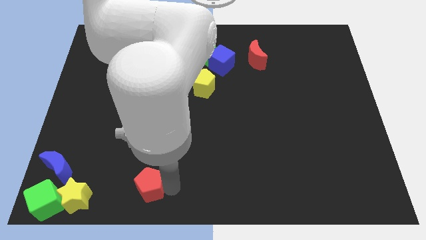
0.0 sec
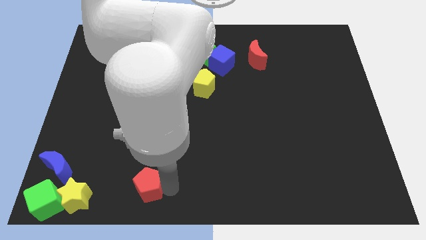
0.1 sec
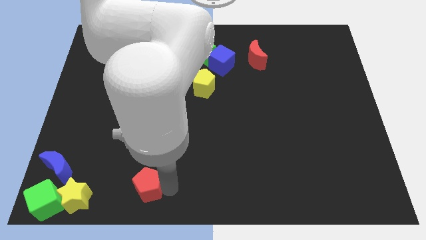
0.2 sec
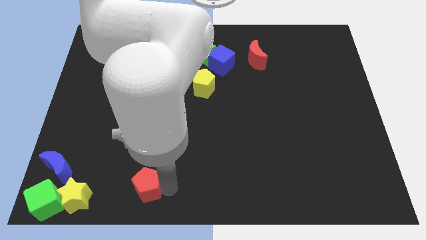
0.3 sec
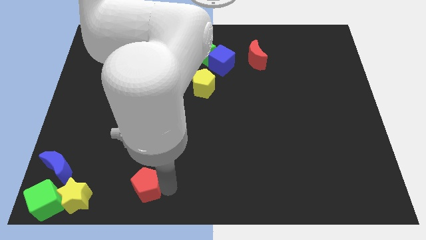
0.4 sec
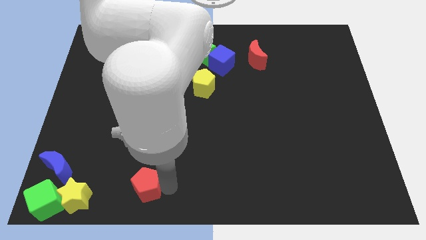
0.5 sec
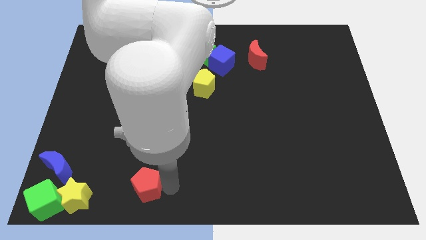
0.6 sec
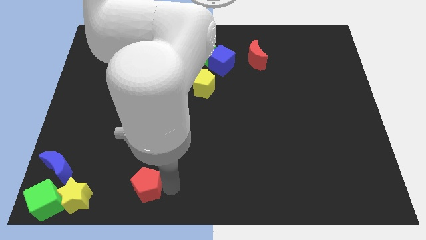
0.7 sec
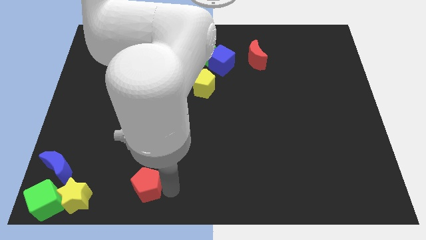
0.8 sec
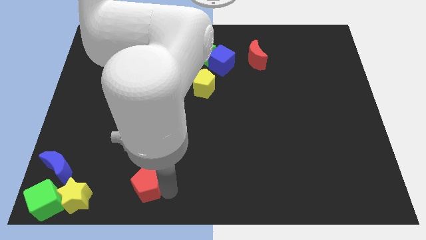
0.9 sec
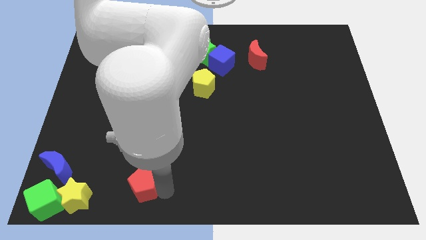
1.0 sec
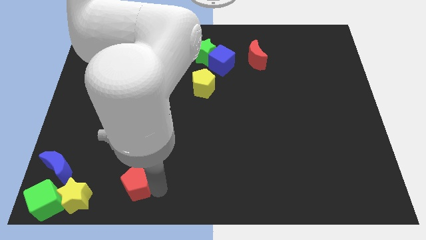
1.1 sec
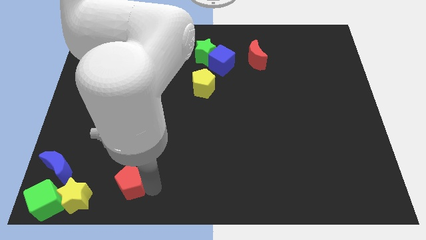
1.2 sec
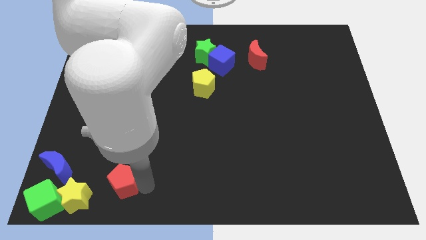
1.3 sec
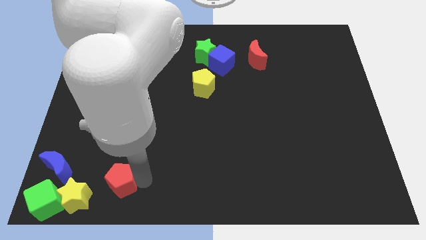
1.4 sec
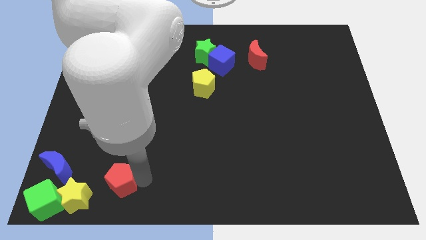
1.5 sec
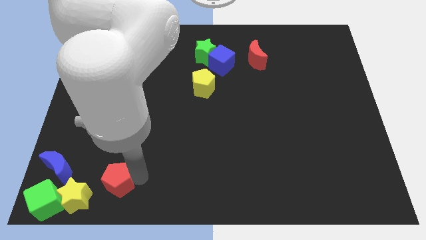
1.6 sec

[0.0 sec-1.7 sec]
move the red pentagon towards the yellow star

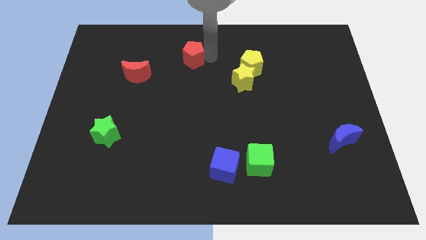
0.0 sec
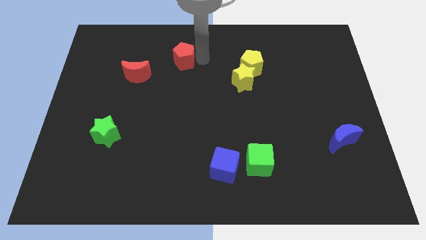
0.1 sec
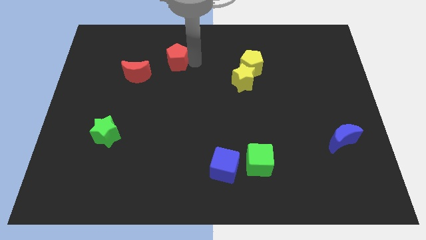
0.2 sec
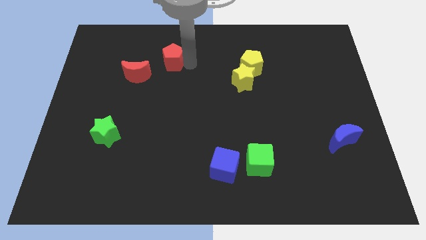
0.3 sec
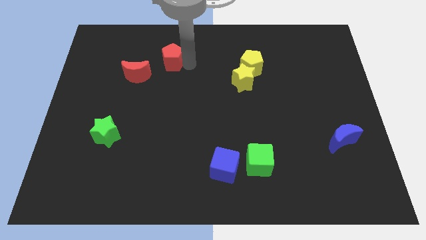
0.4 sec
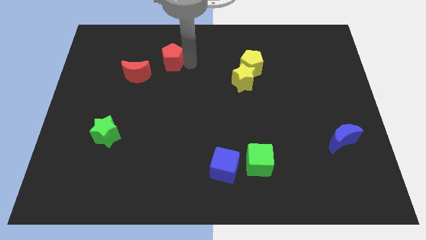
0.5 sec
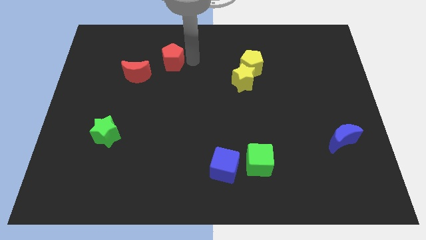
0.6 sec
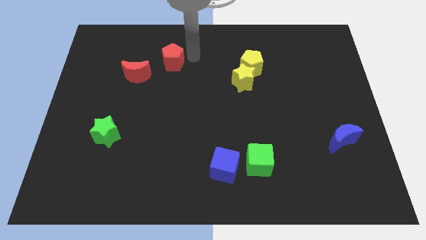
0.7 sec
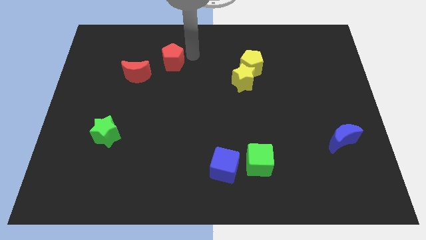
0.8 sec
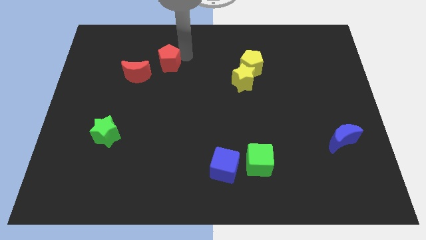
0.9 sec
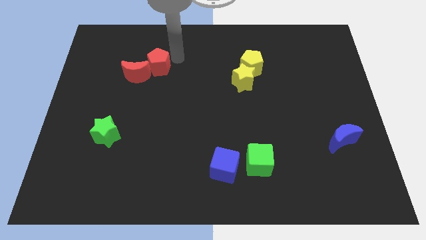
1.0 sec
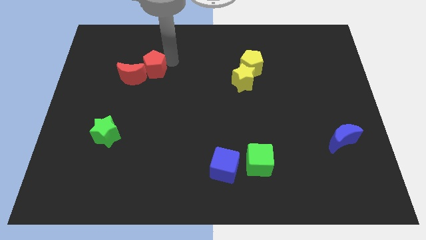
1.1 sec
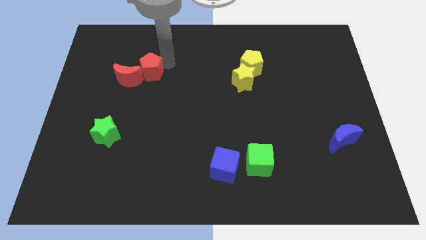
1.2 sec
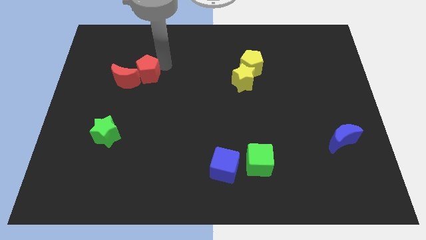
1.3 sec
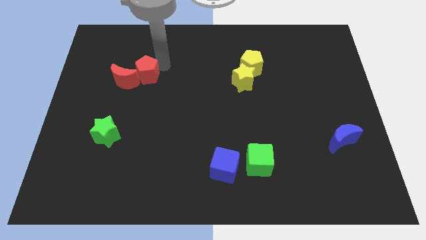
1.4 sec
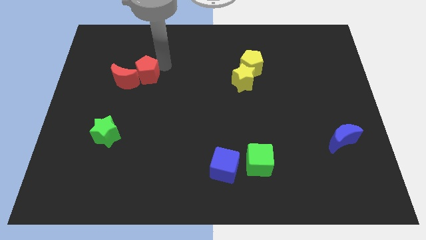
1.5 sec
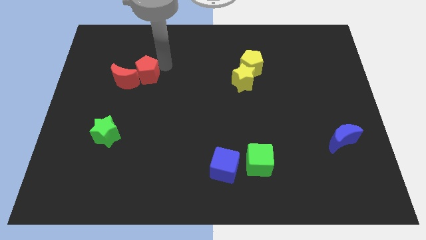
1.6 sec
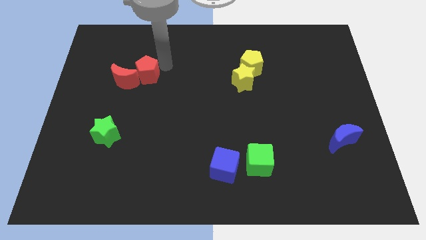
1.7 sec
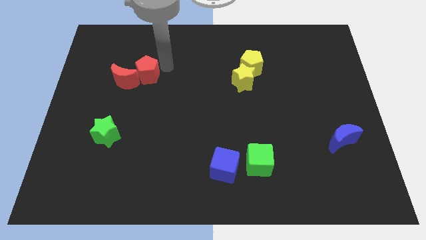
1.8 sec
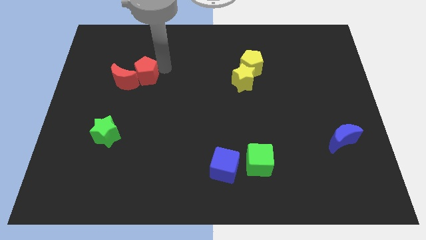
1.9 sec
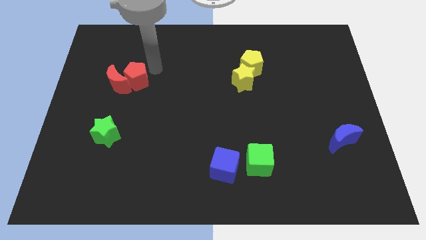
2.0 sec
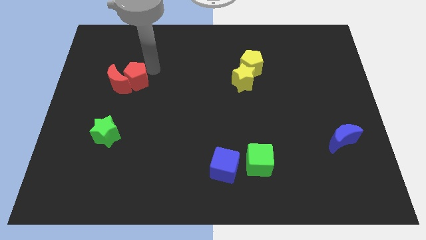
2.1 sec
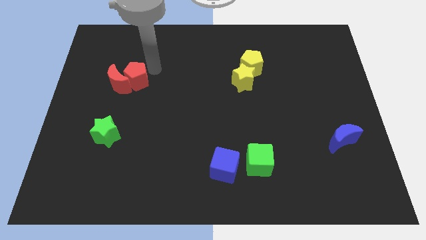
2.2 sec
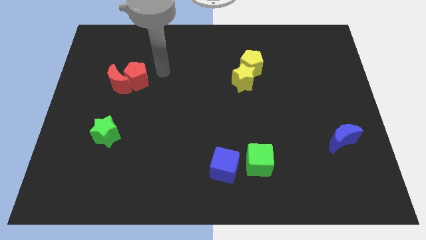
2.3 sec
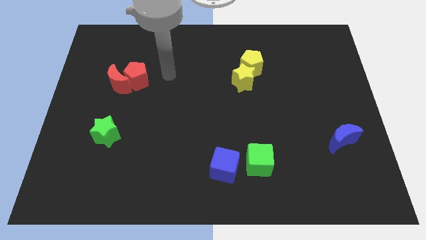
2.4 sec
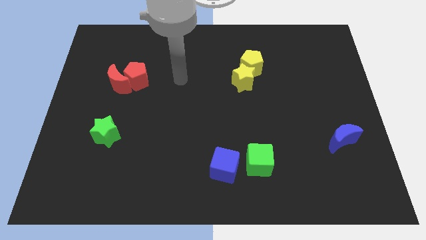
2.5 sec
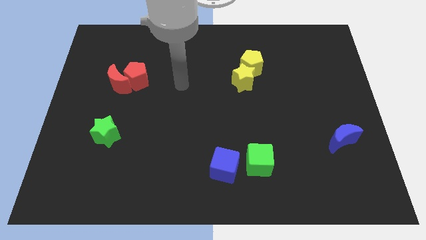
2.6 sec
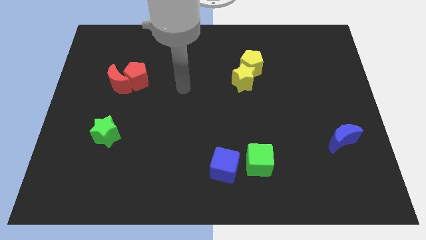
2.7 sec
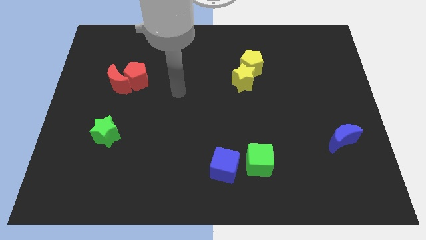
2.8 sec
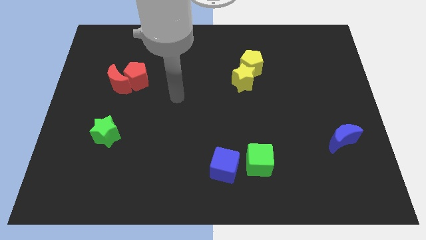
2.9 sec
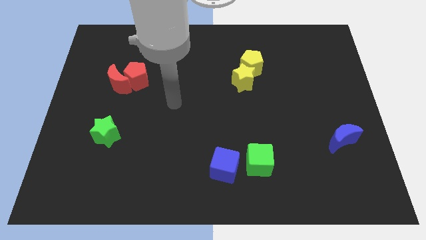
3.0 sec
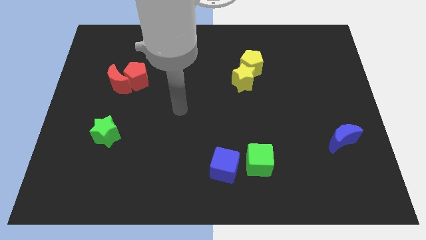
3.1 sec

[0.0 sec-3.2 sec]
place the red blocks together at the top side of the green star

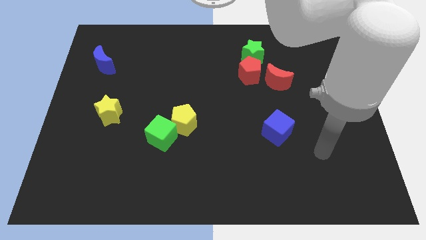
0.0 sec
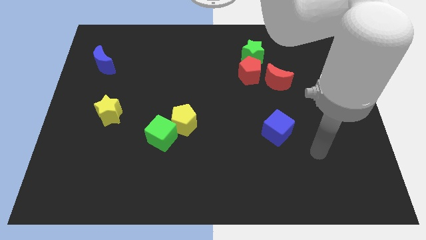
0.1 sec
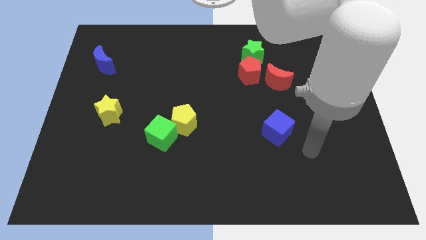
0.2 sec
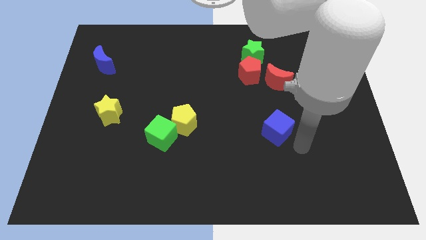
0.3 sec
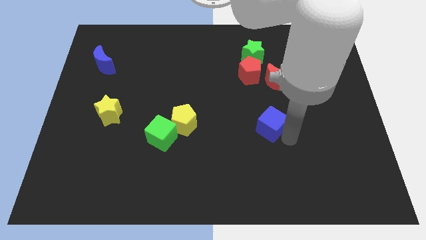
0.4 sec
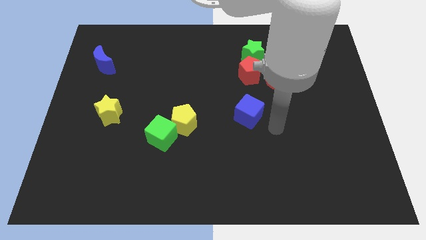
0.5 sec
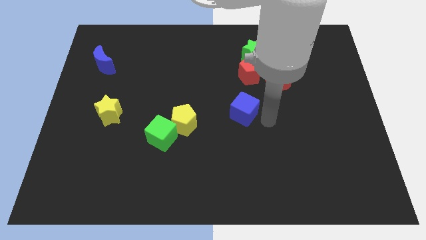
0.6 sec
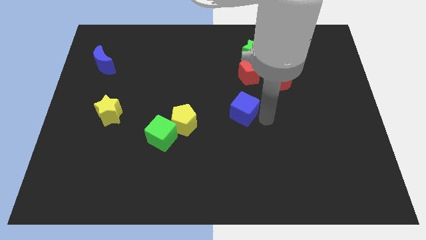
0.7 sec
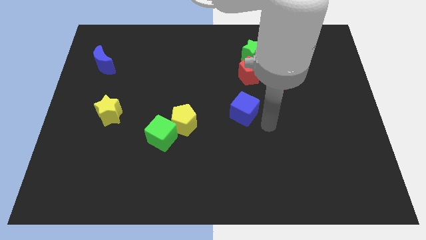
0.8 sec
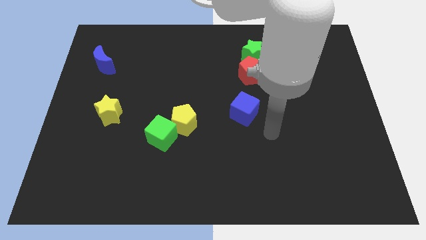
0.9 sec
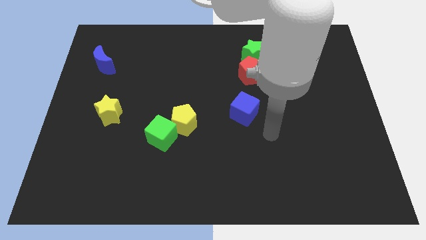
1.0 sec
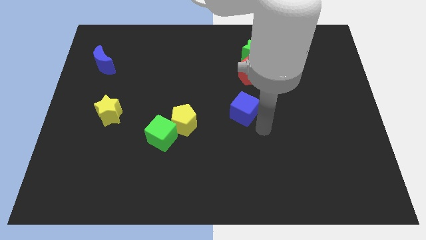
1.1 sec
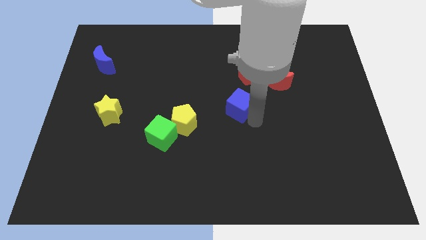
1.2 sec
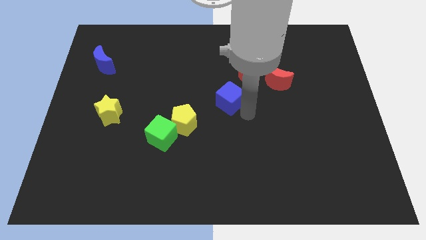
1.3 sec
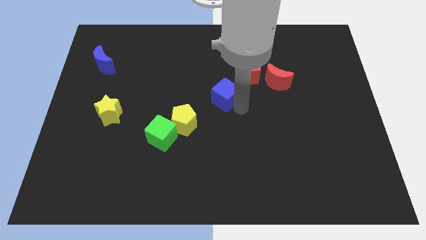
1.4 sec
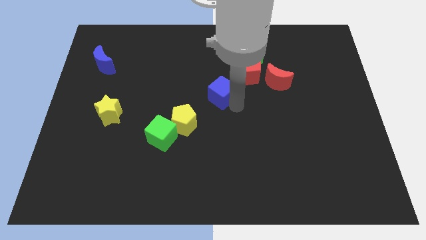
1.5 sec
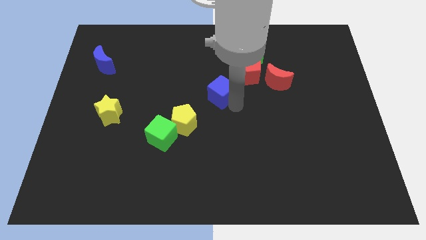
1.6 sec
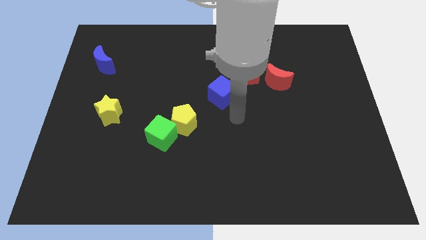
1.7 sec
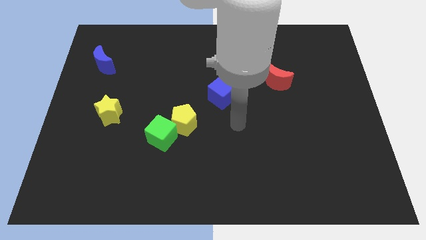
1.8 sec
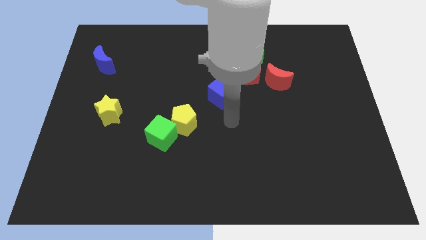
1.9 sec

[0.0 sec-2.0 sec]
move the blue cube towards the red pentagon

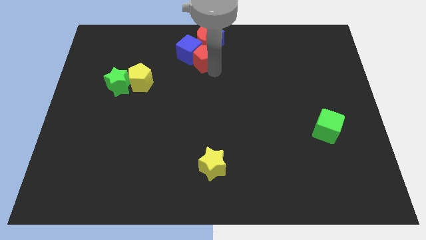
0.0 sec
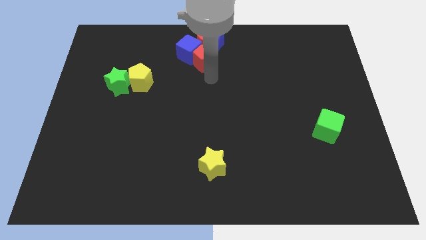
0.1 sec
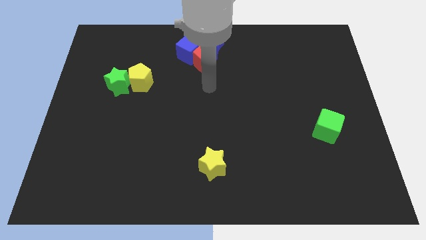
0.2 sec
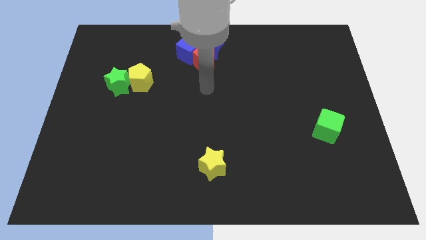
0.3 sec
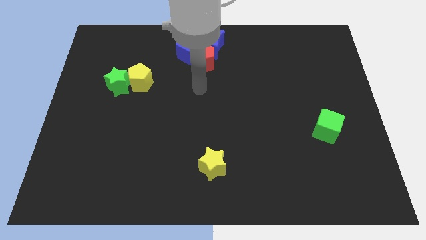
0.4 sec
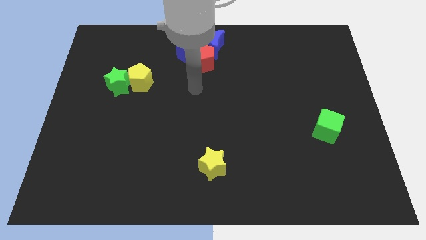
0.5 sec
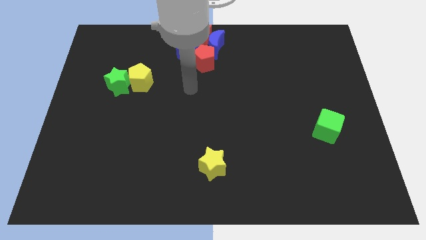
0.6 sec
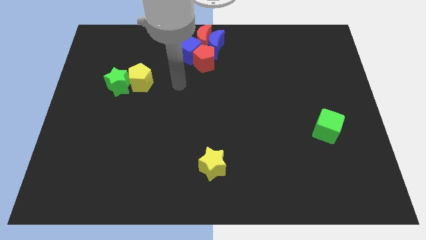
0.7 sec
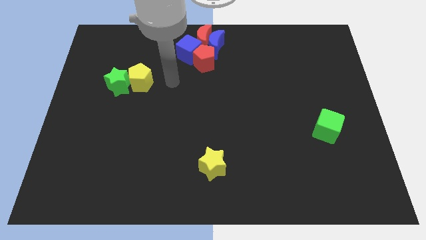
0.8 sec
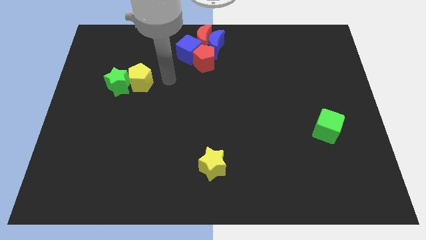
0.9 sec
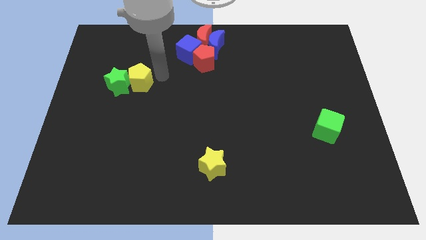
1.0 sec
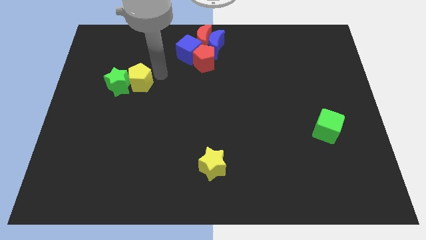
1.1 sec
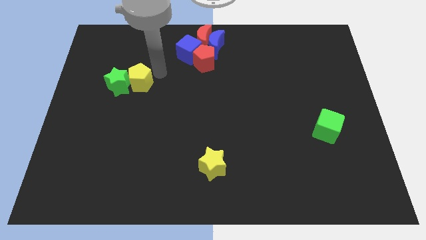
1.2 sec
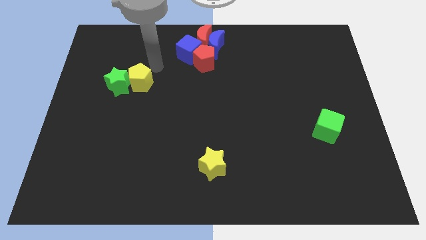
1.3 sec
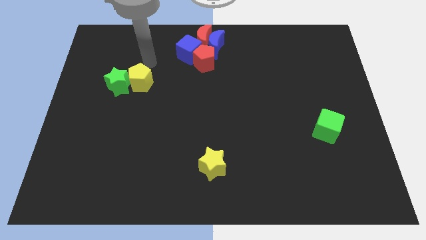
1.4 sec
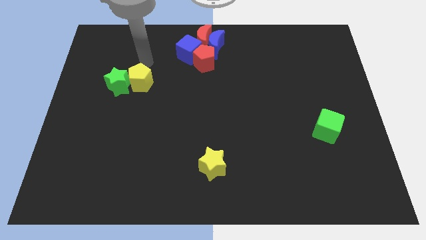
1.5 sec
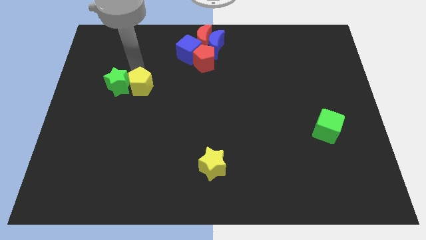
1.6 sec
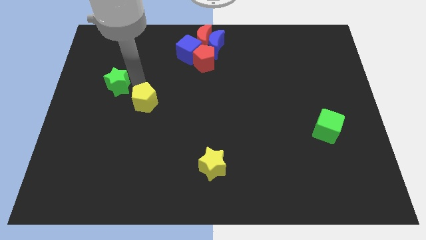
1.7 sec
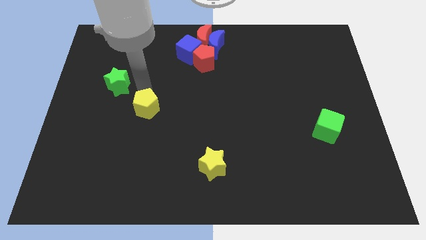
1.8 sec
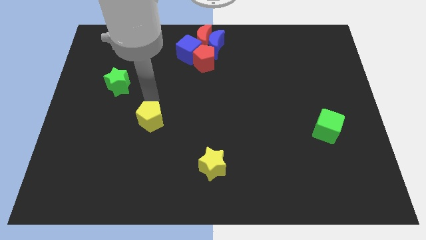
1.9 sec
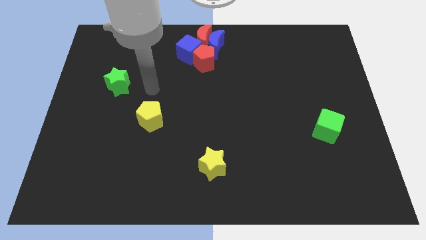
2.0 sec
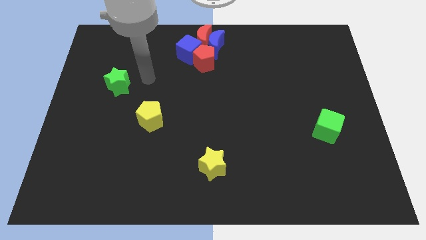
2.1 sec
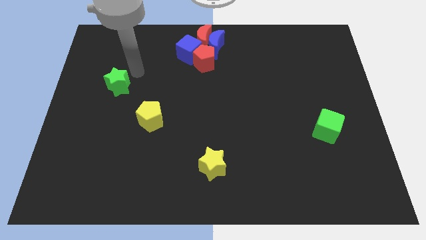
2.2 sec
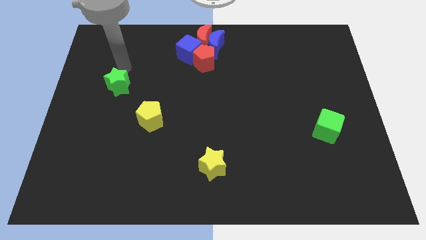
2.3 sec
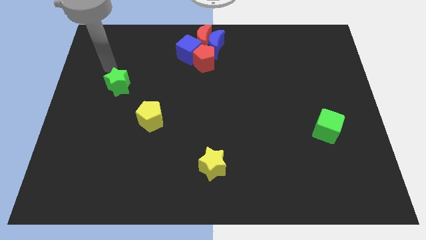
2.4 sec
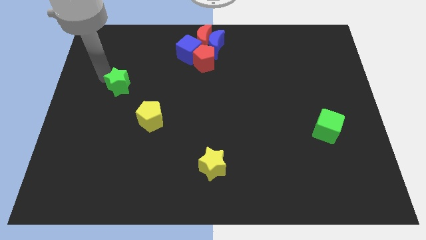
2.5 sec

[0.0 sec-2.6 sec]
push the yellow pentagon diagonally to the bottom right of the green star
